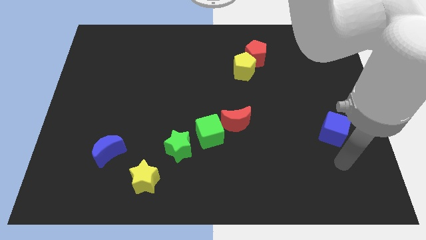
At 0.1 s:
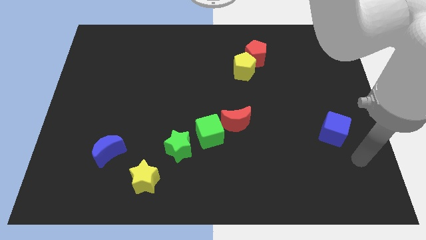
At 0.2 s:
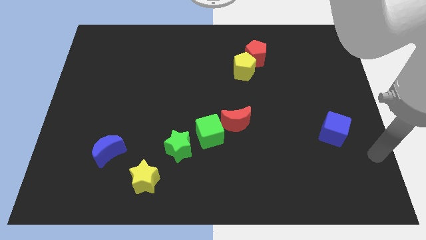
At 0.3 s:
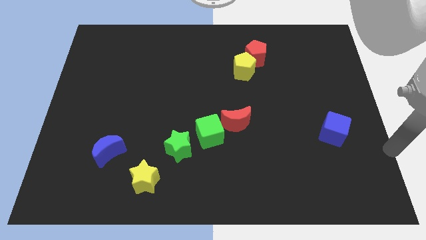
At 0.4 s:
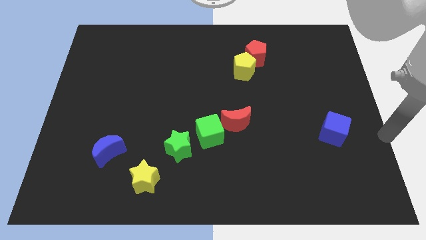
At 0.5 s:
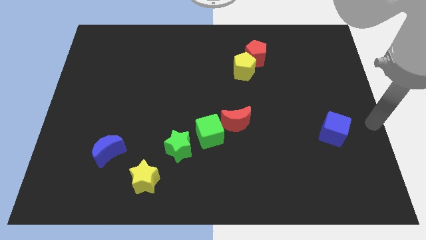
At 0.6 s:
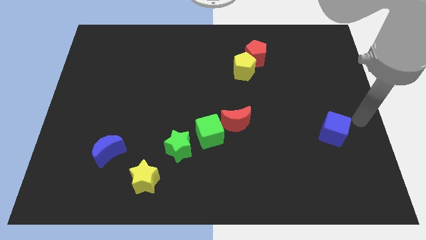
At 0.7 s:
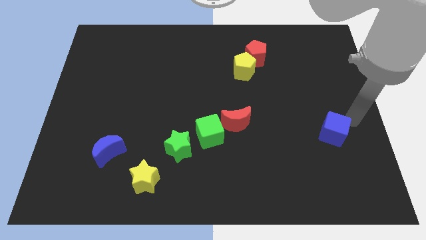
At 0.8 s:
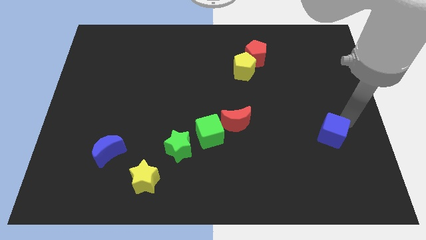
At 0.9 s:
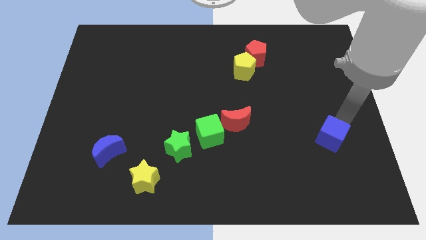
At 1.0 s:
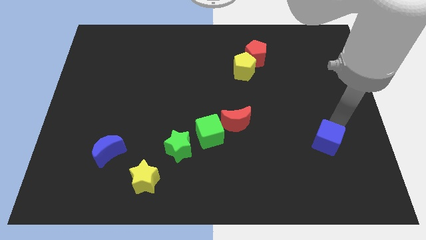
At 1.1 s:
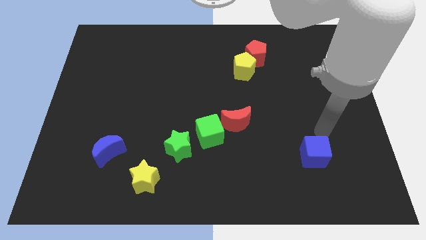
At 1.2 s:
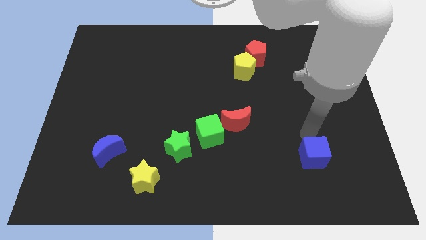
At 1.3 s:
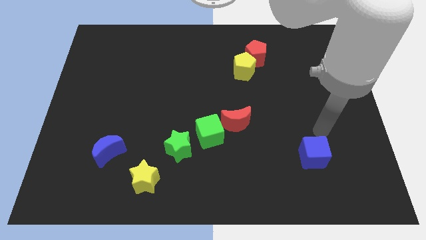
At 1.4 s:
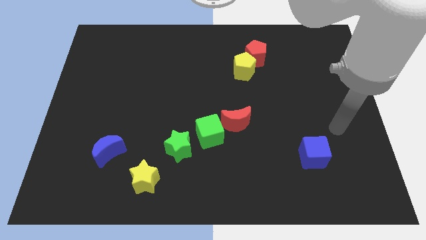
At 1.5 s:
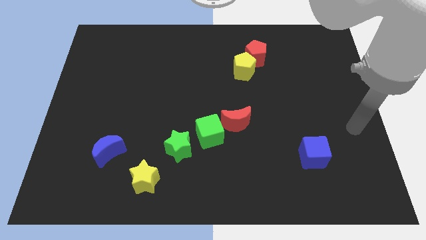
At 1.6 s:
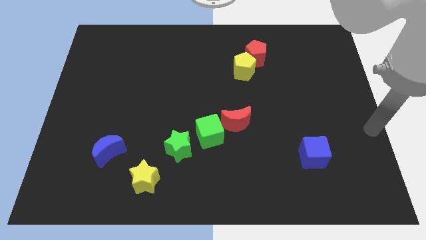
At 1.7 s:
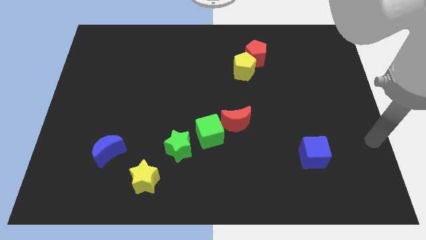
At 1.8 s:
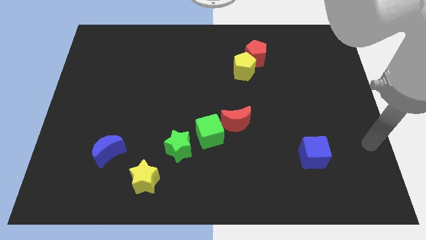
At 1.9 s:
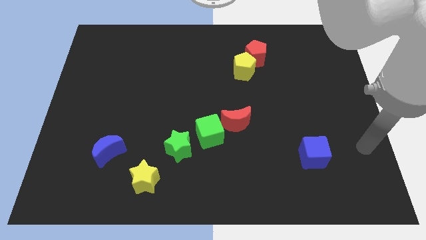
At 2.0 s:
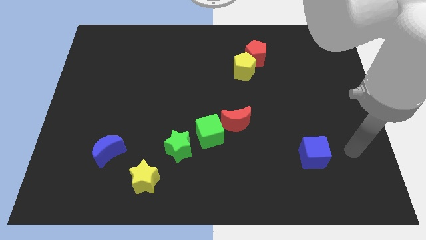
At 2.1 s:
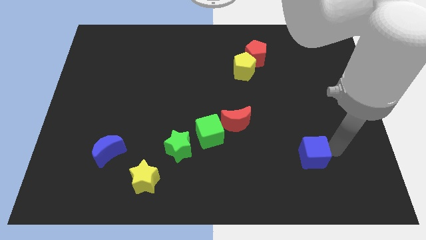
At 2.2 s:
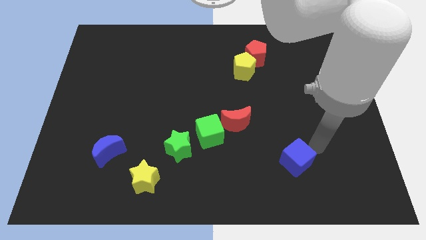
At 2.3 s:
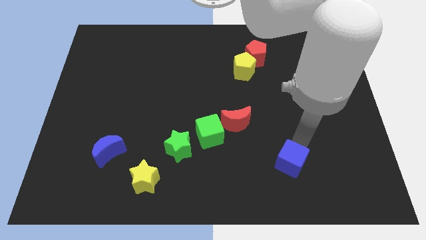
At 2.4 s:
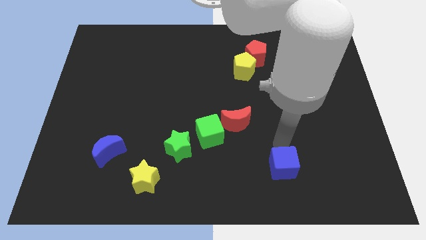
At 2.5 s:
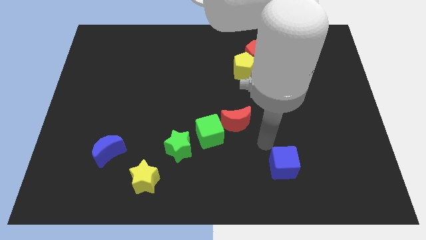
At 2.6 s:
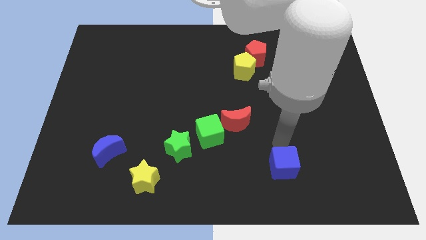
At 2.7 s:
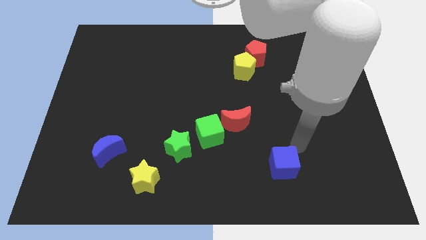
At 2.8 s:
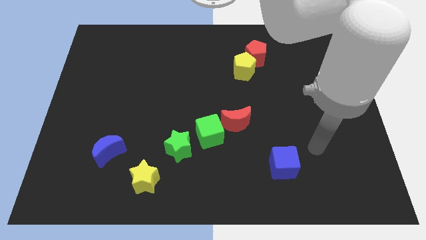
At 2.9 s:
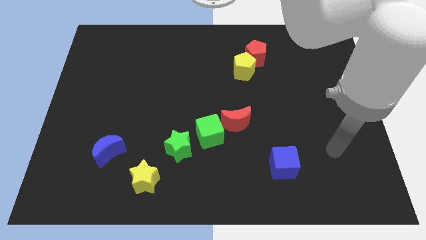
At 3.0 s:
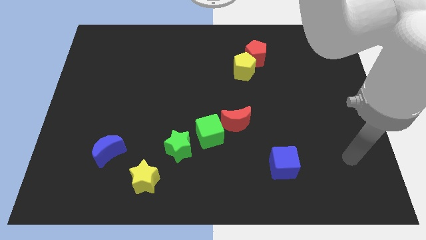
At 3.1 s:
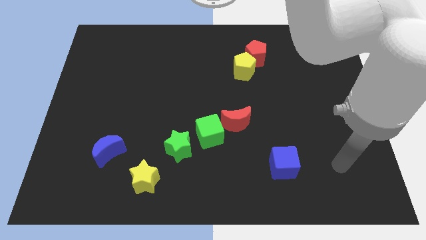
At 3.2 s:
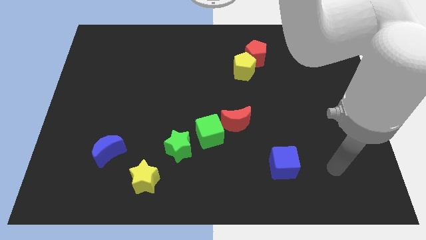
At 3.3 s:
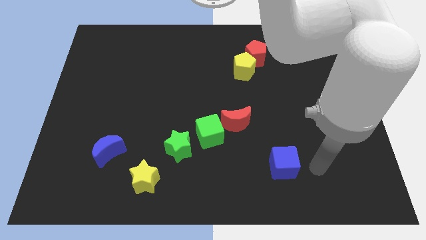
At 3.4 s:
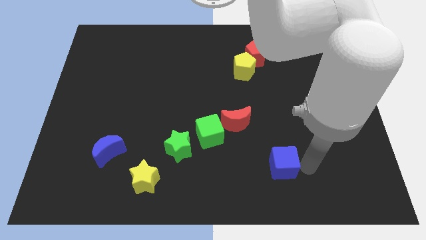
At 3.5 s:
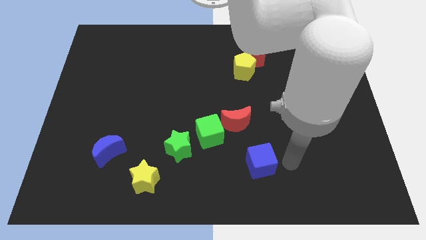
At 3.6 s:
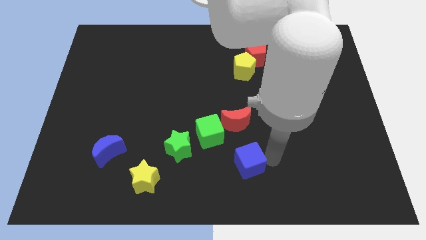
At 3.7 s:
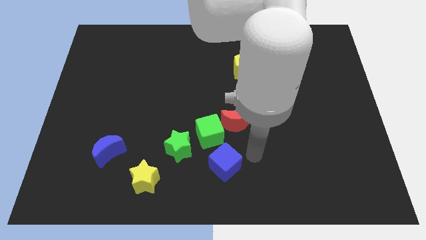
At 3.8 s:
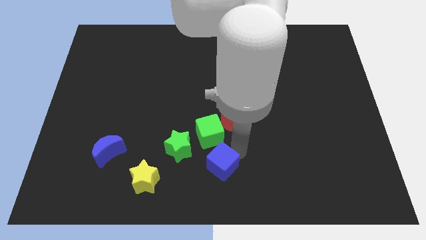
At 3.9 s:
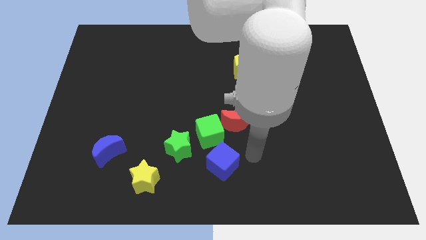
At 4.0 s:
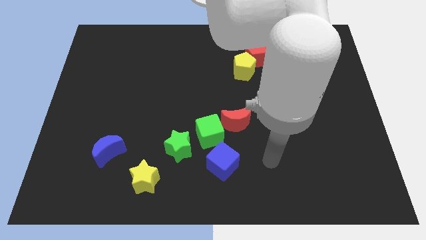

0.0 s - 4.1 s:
move the blue cube below the green cube

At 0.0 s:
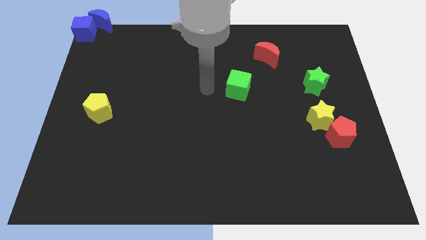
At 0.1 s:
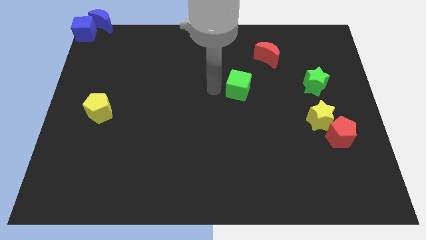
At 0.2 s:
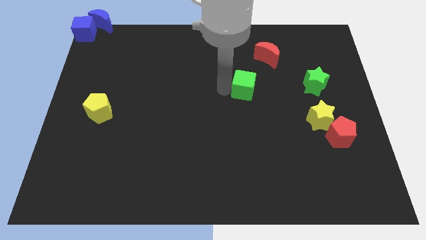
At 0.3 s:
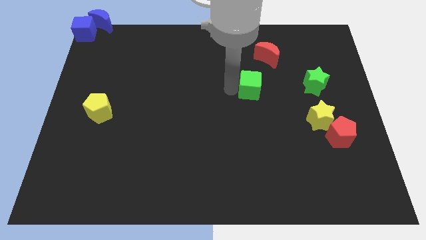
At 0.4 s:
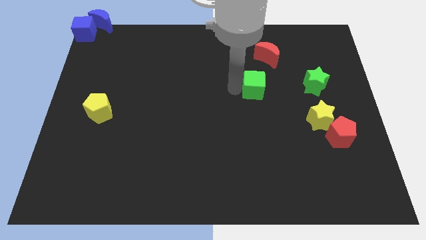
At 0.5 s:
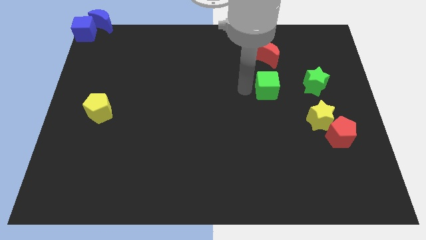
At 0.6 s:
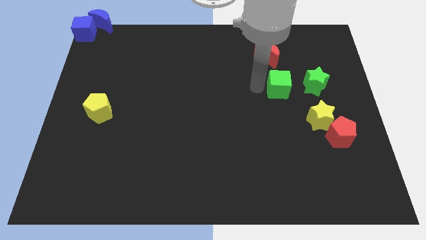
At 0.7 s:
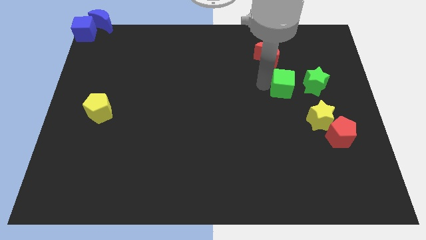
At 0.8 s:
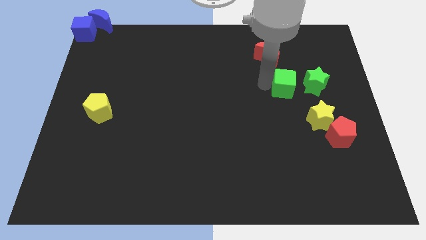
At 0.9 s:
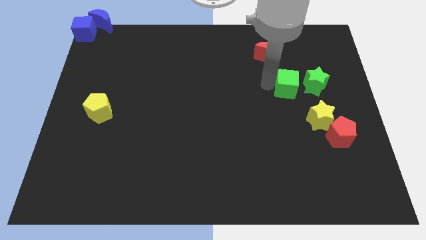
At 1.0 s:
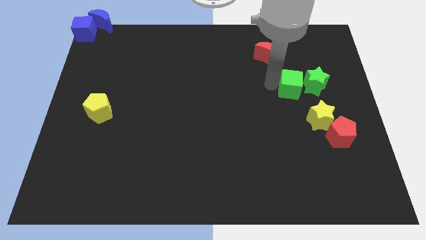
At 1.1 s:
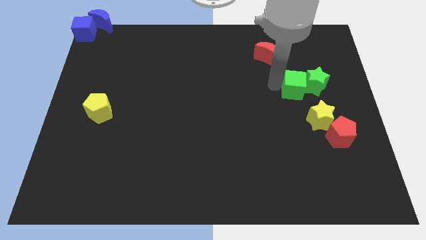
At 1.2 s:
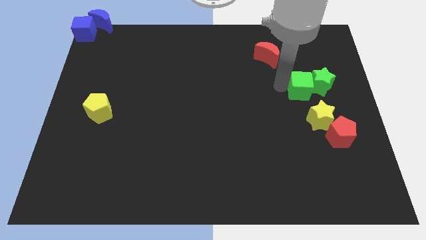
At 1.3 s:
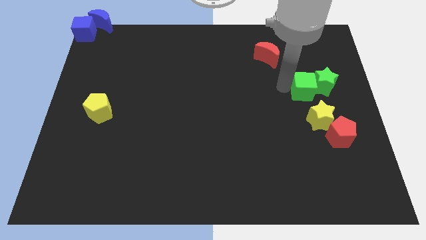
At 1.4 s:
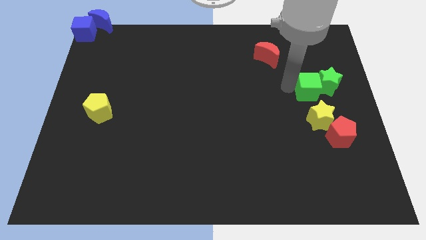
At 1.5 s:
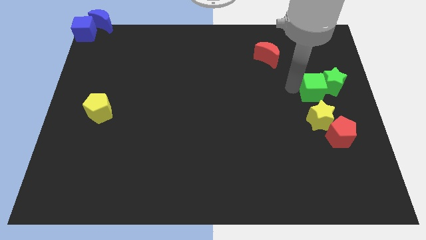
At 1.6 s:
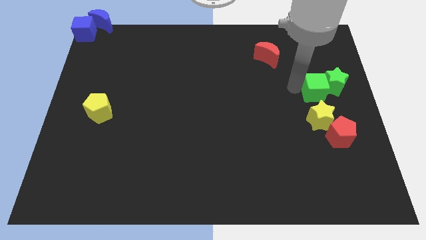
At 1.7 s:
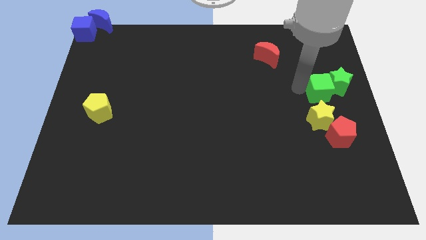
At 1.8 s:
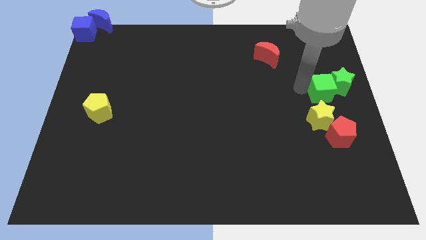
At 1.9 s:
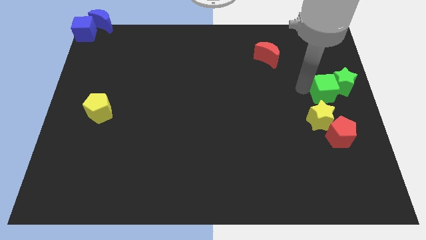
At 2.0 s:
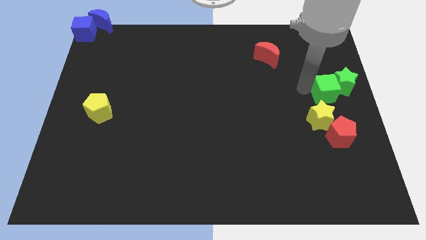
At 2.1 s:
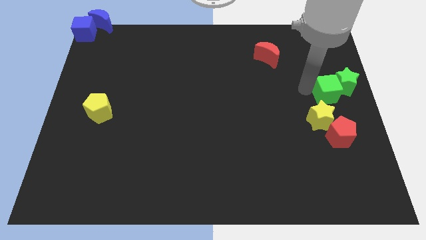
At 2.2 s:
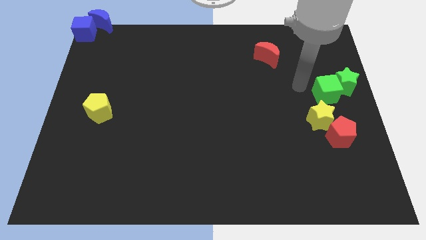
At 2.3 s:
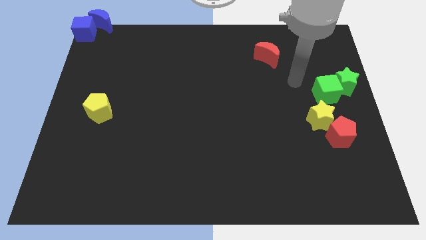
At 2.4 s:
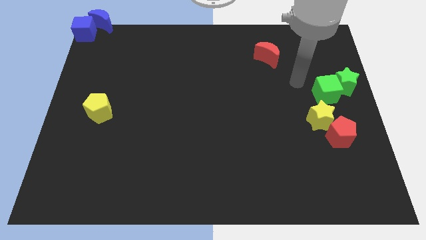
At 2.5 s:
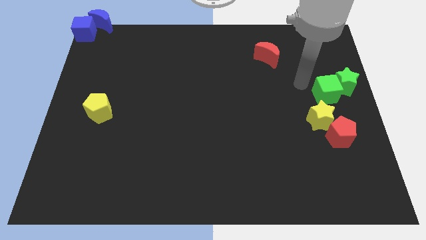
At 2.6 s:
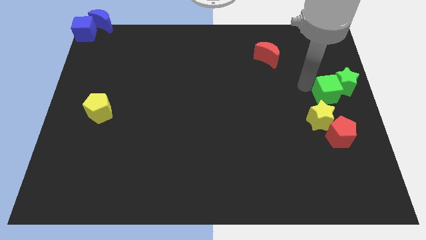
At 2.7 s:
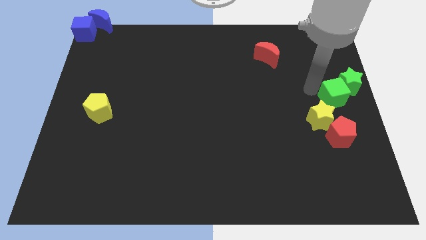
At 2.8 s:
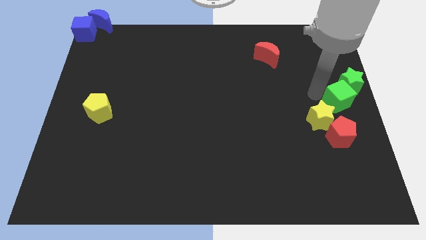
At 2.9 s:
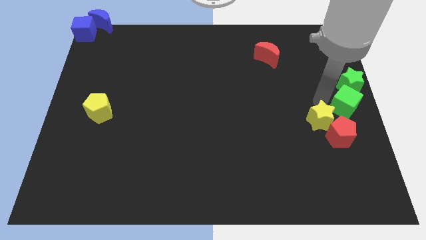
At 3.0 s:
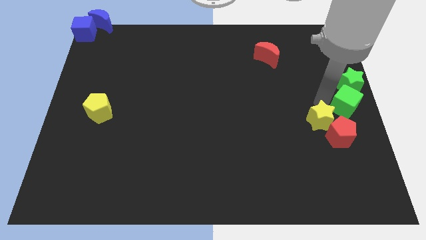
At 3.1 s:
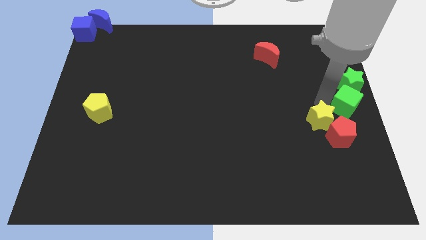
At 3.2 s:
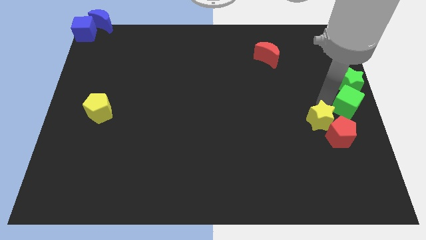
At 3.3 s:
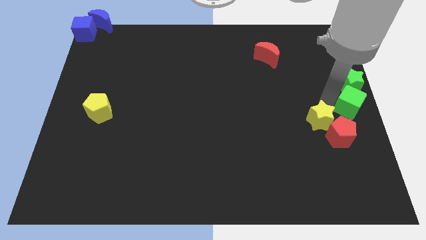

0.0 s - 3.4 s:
place the green blocks to the center right side of the board

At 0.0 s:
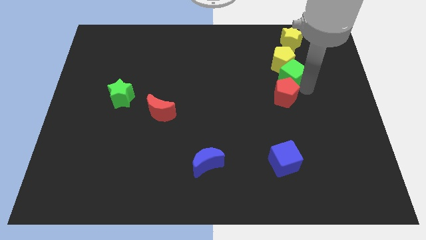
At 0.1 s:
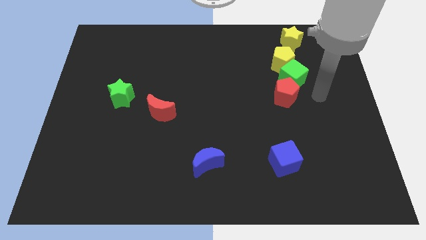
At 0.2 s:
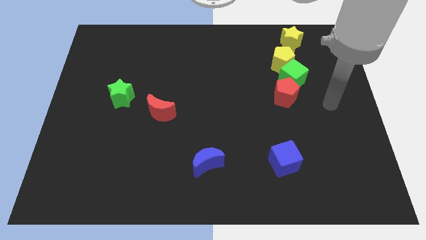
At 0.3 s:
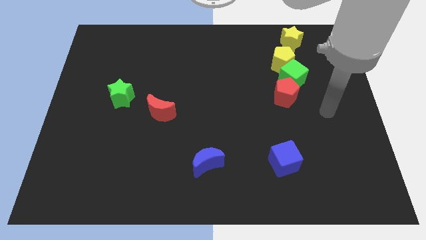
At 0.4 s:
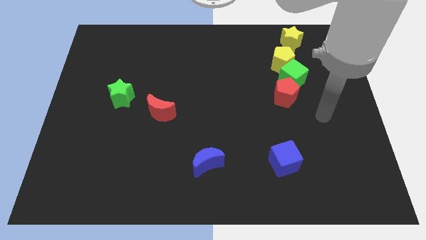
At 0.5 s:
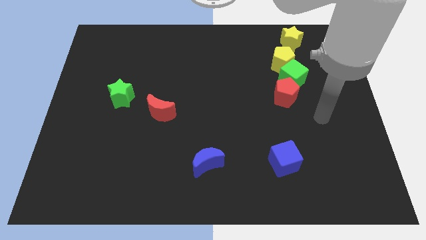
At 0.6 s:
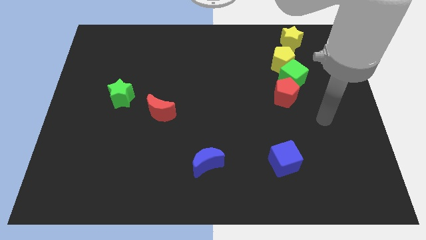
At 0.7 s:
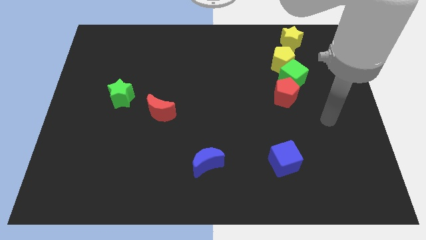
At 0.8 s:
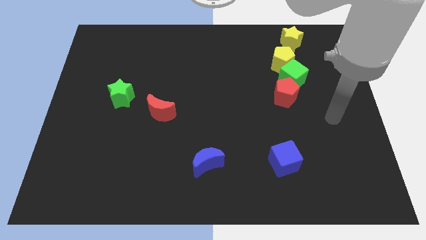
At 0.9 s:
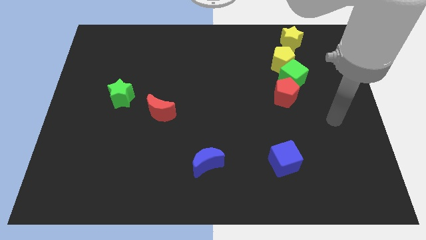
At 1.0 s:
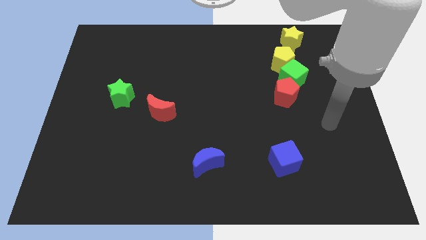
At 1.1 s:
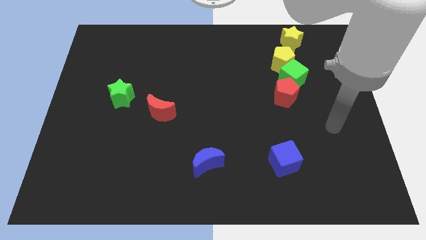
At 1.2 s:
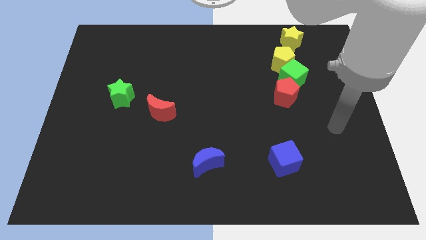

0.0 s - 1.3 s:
tap green cube slightly

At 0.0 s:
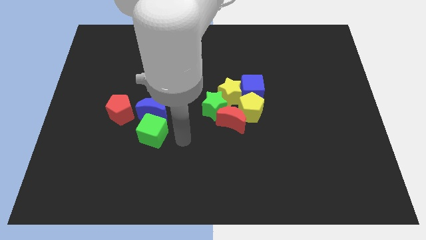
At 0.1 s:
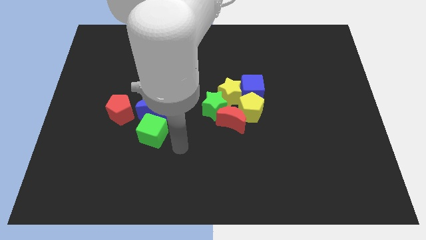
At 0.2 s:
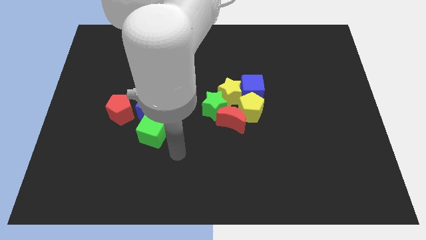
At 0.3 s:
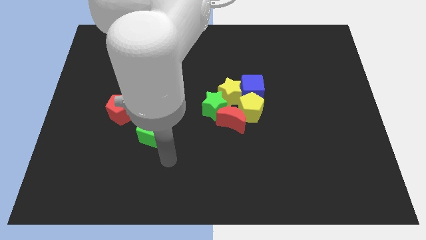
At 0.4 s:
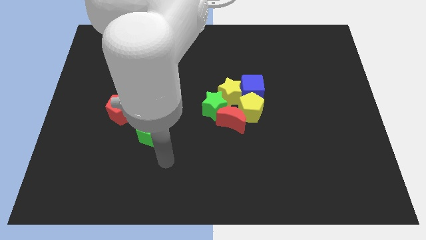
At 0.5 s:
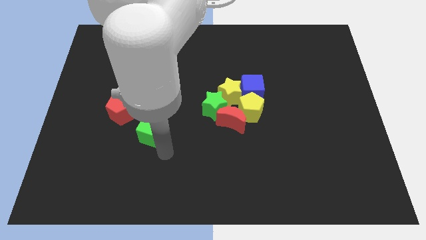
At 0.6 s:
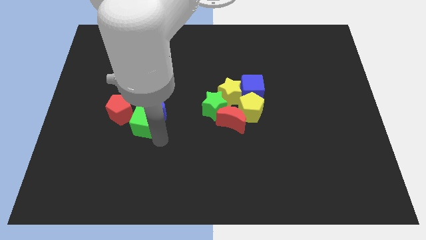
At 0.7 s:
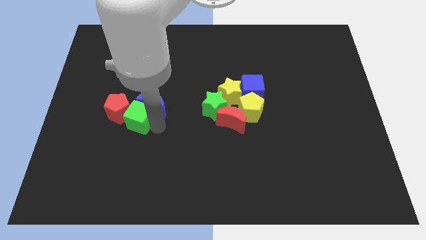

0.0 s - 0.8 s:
move green cube left to the red pentagon
